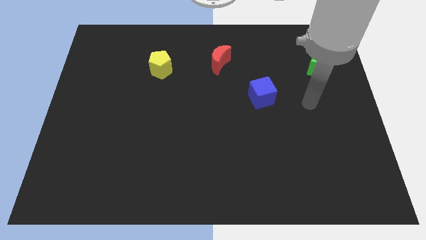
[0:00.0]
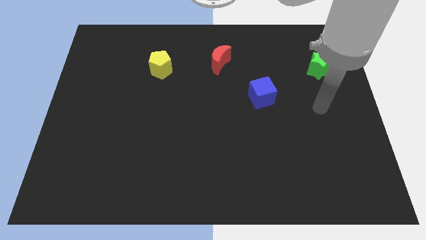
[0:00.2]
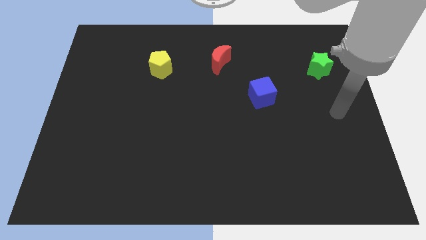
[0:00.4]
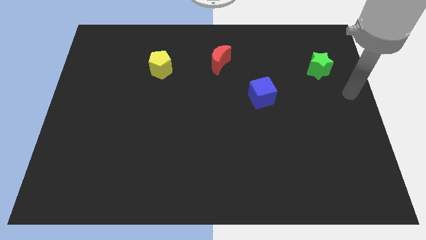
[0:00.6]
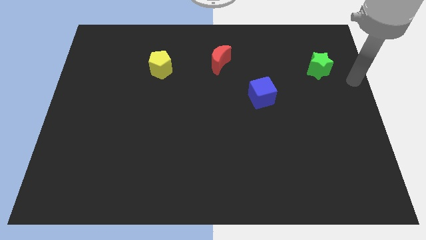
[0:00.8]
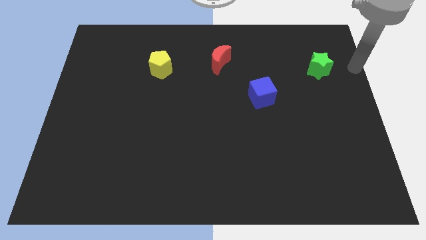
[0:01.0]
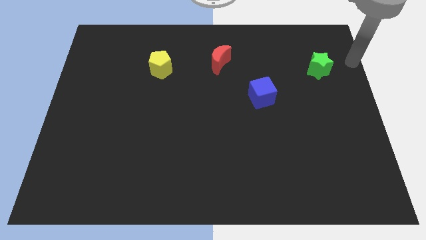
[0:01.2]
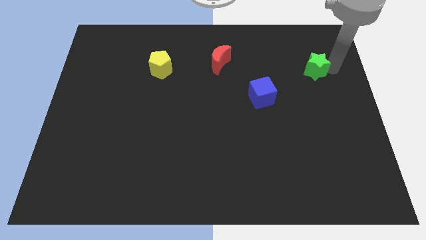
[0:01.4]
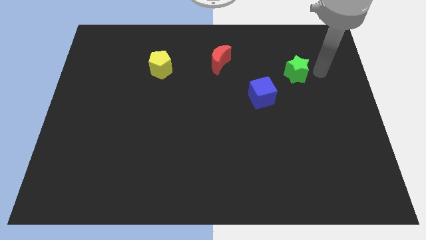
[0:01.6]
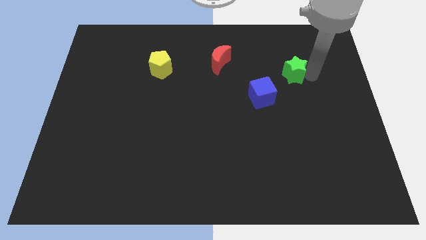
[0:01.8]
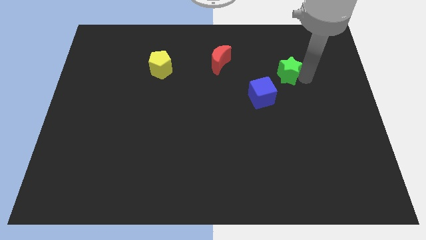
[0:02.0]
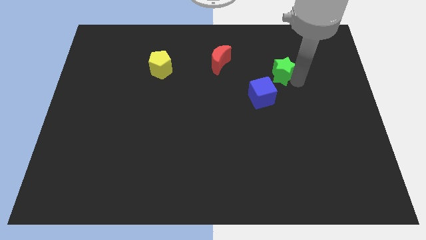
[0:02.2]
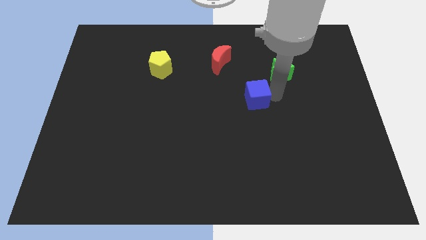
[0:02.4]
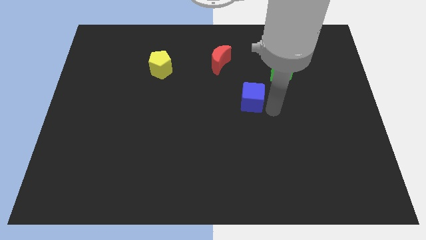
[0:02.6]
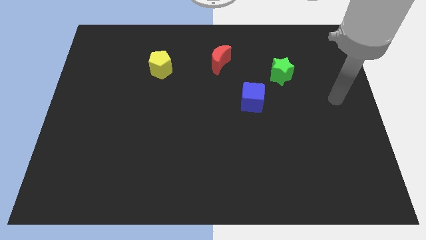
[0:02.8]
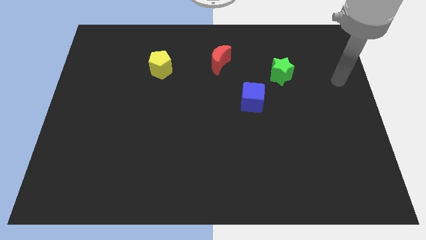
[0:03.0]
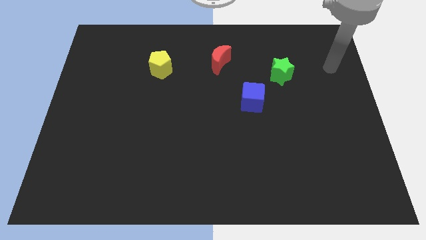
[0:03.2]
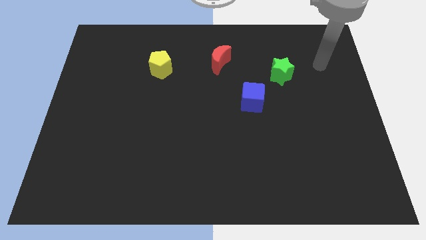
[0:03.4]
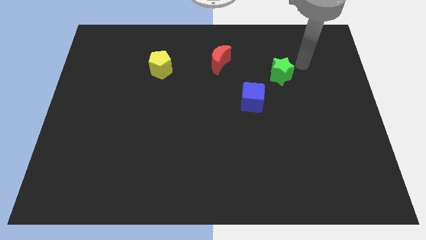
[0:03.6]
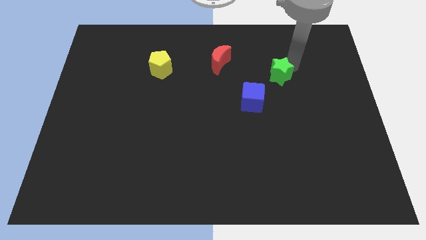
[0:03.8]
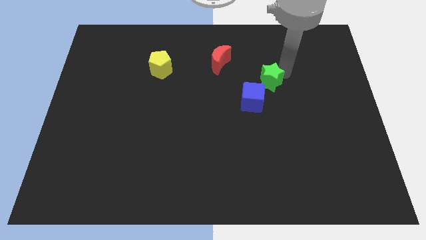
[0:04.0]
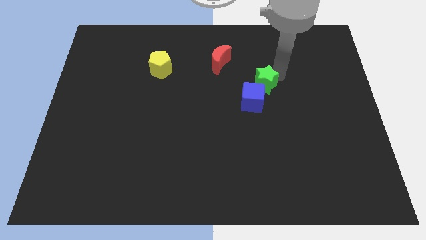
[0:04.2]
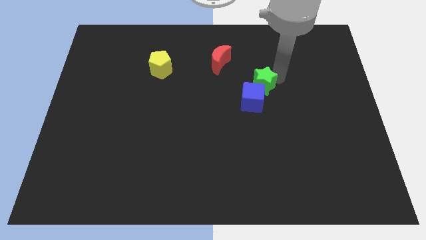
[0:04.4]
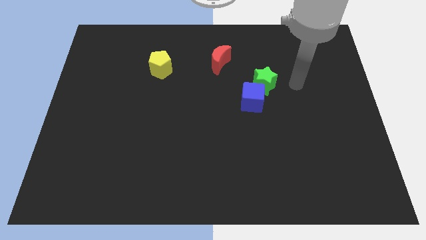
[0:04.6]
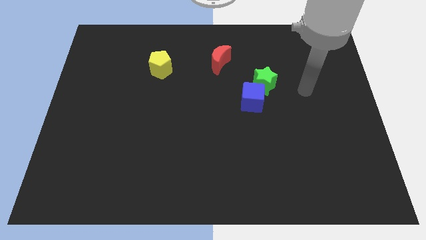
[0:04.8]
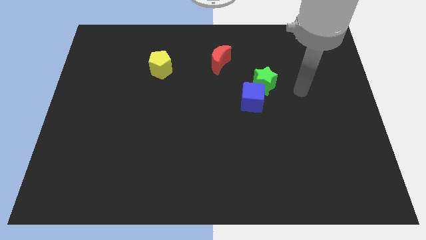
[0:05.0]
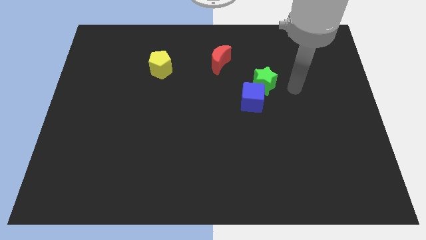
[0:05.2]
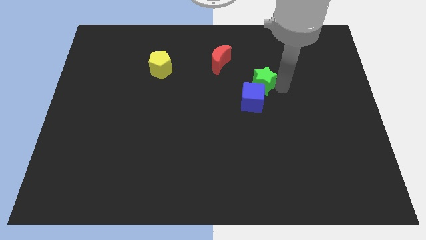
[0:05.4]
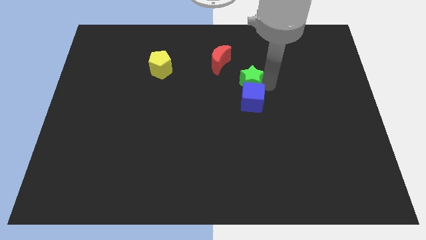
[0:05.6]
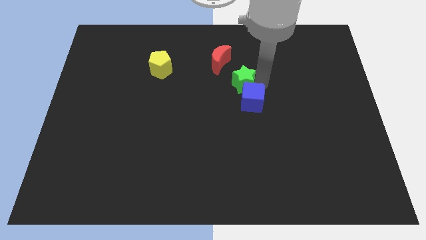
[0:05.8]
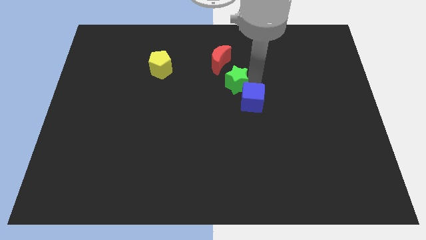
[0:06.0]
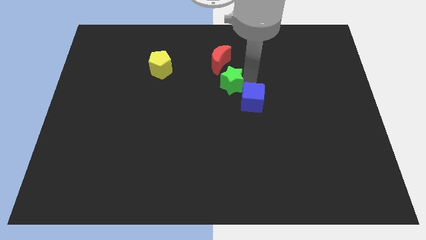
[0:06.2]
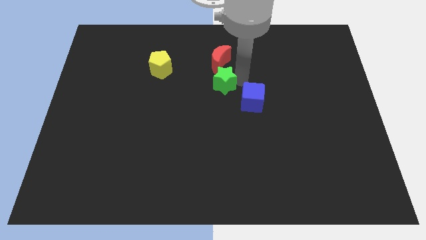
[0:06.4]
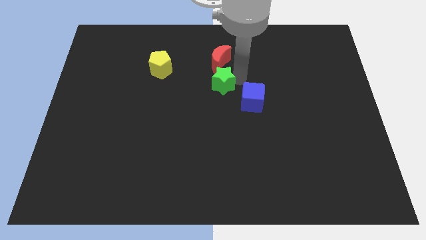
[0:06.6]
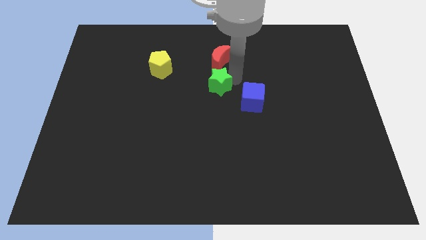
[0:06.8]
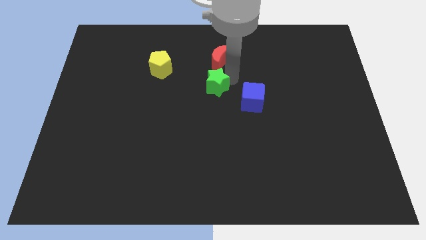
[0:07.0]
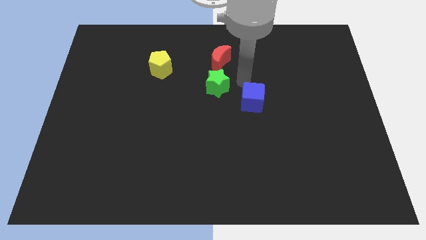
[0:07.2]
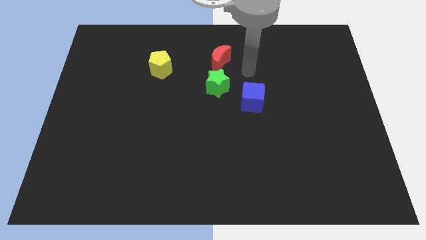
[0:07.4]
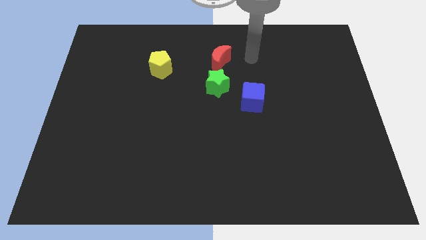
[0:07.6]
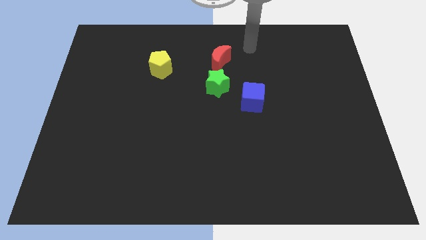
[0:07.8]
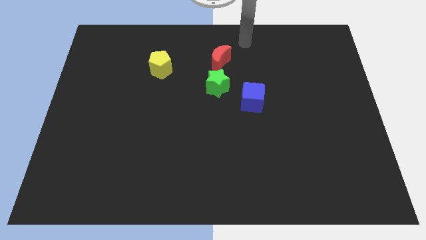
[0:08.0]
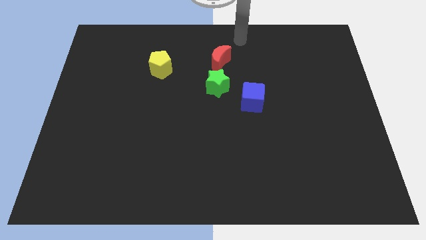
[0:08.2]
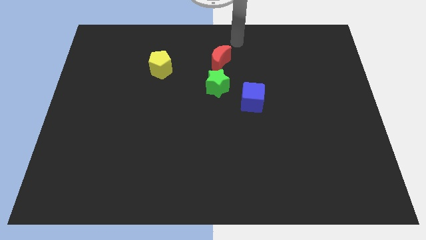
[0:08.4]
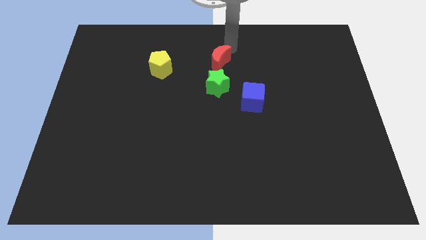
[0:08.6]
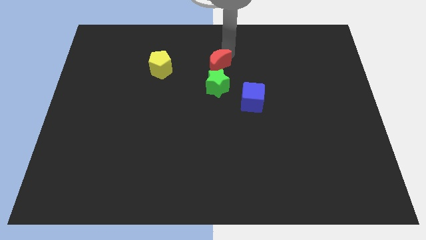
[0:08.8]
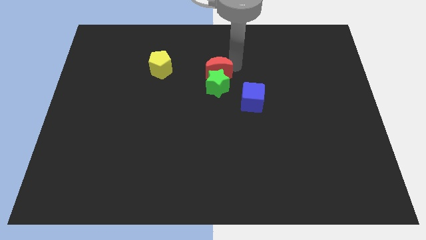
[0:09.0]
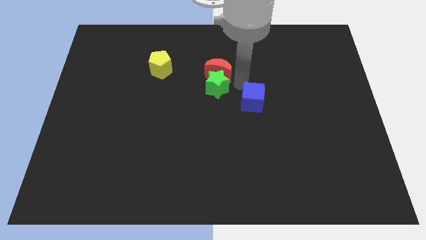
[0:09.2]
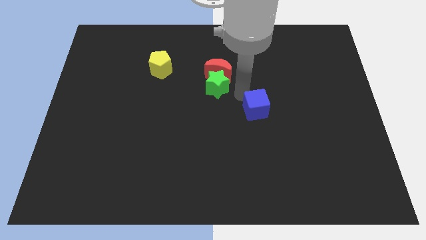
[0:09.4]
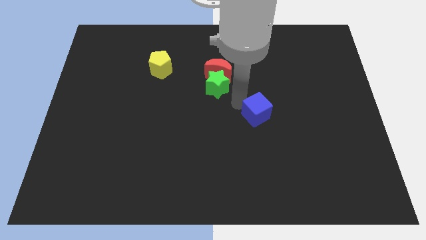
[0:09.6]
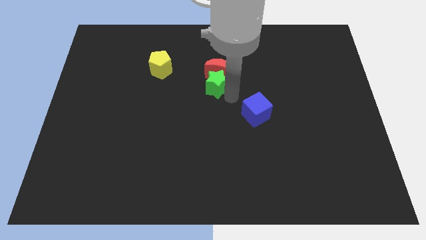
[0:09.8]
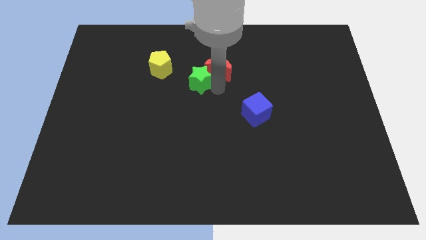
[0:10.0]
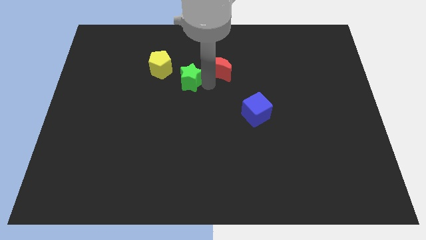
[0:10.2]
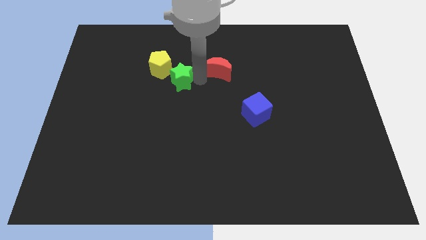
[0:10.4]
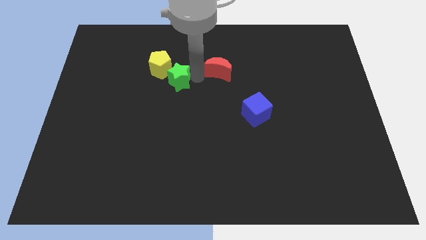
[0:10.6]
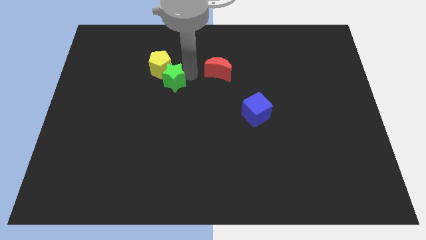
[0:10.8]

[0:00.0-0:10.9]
slide the green star towards the yellow pentagon

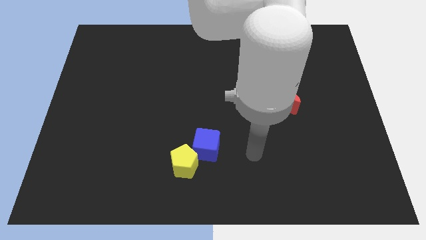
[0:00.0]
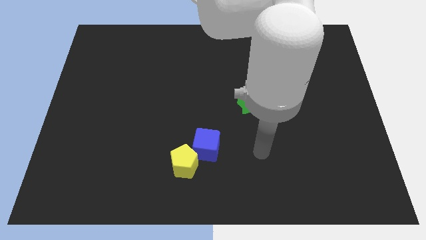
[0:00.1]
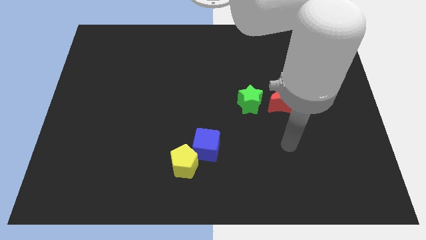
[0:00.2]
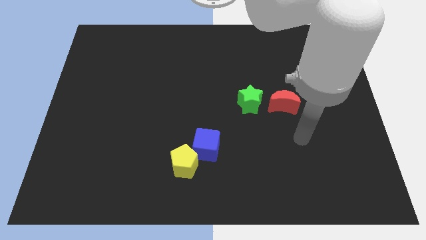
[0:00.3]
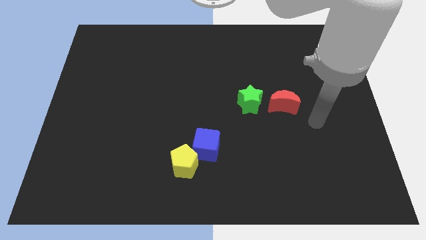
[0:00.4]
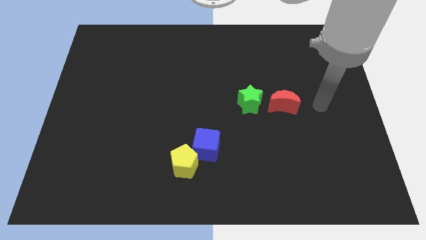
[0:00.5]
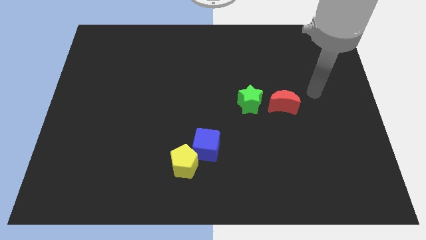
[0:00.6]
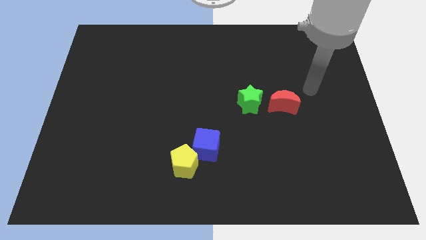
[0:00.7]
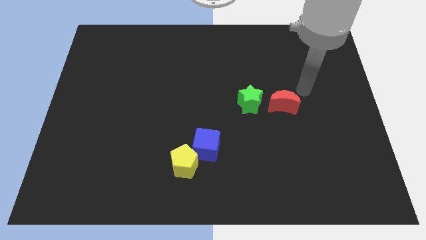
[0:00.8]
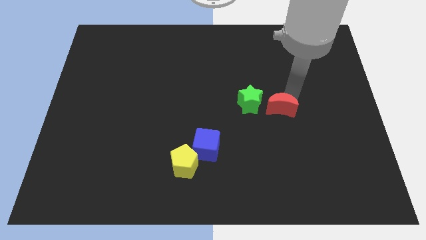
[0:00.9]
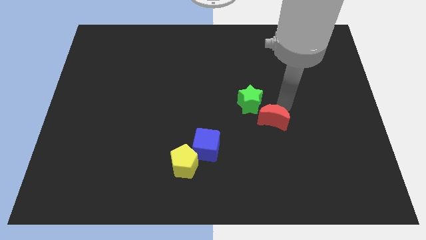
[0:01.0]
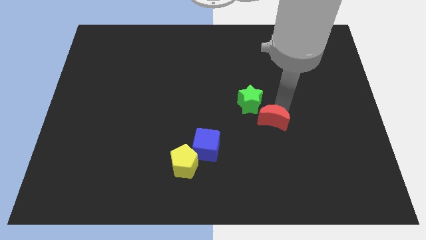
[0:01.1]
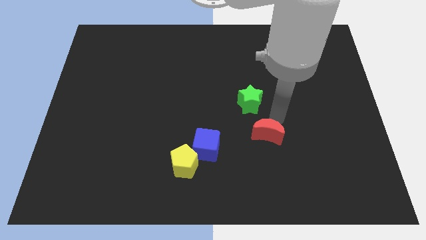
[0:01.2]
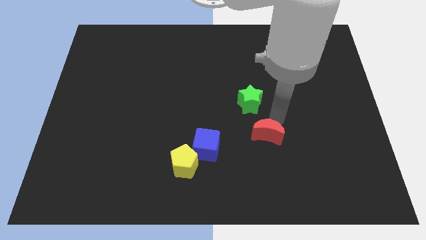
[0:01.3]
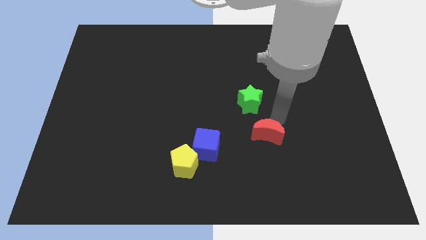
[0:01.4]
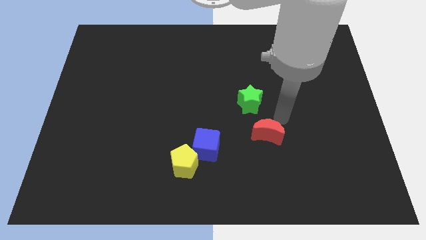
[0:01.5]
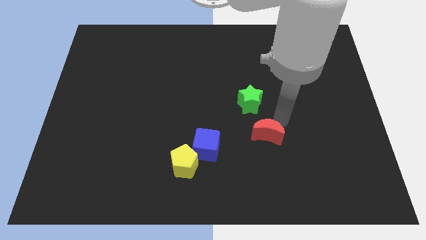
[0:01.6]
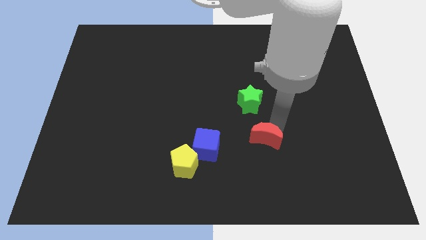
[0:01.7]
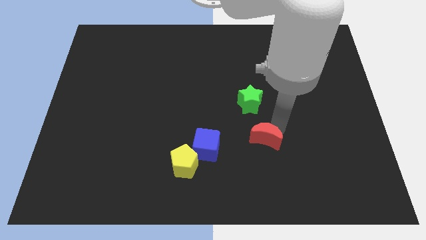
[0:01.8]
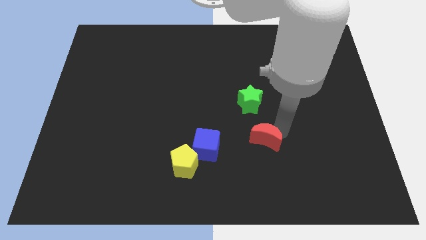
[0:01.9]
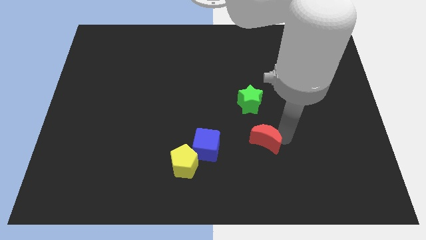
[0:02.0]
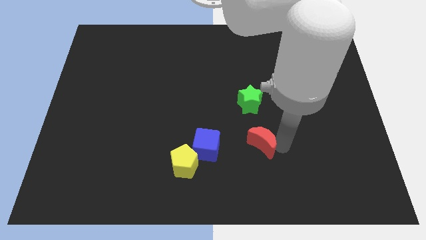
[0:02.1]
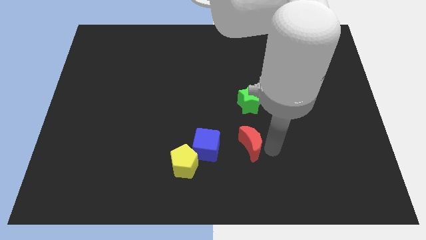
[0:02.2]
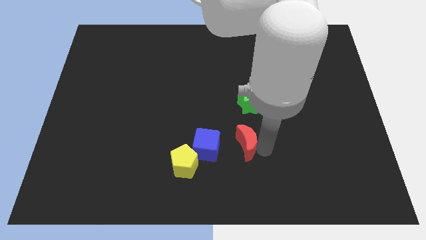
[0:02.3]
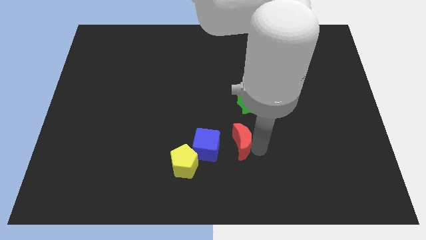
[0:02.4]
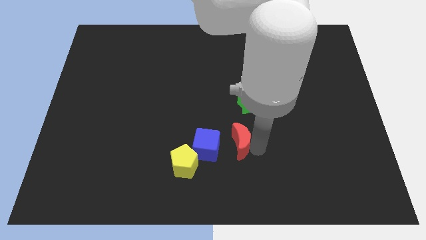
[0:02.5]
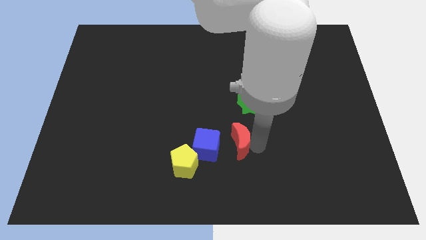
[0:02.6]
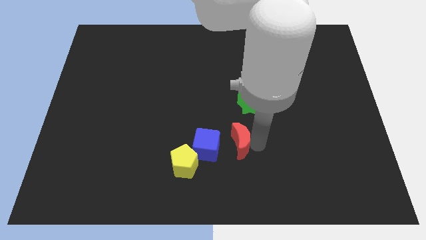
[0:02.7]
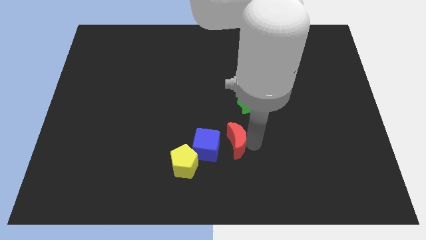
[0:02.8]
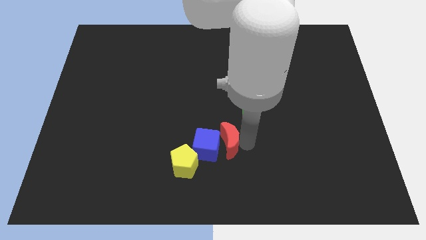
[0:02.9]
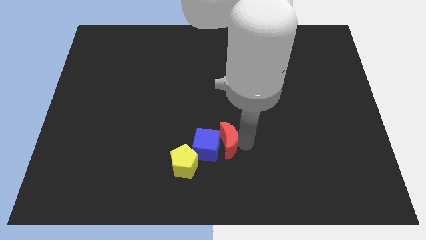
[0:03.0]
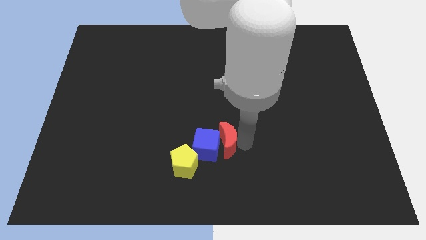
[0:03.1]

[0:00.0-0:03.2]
move the moon to the cube
